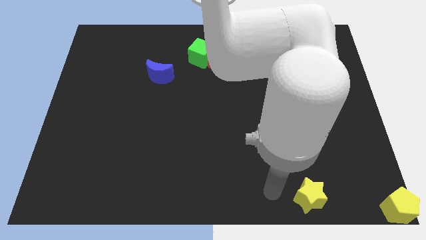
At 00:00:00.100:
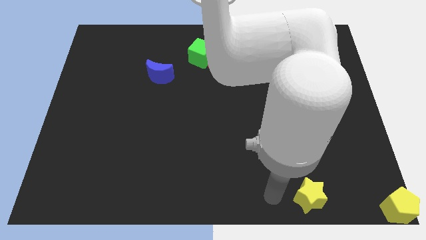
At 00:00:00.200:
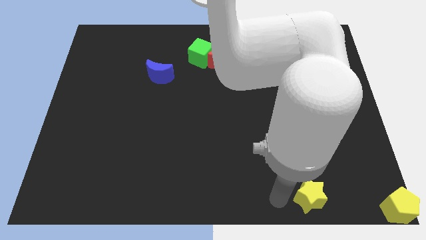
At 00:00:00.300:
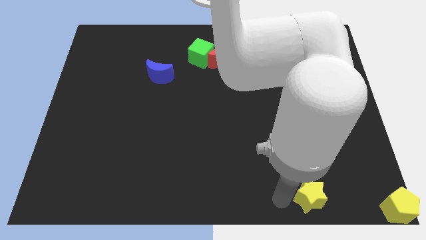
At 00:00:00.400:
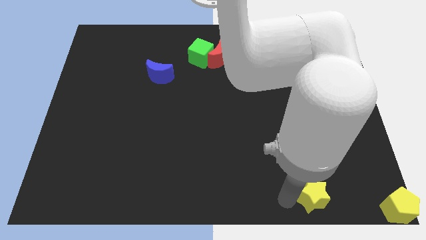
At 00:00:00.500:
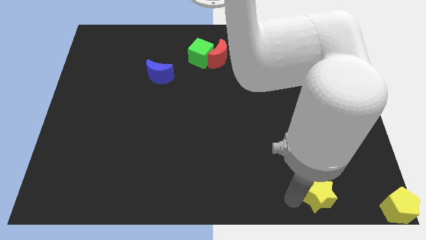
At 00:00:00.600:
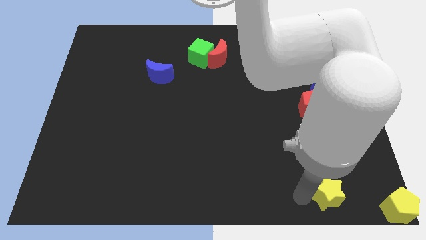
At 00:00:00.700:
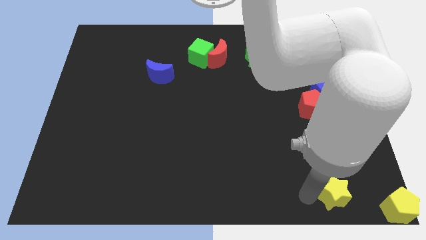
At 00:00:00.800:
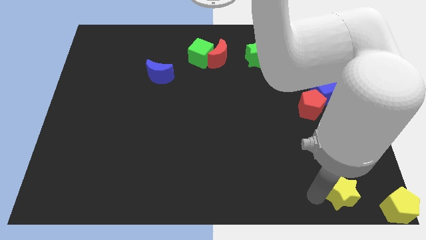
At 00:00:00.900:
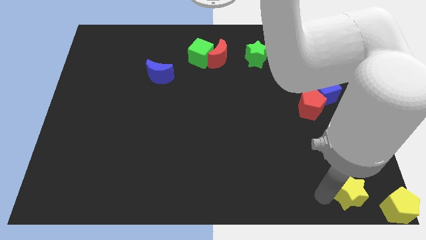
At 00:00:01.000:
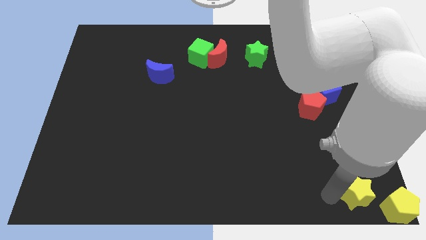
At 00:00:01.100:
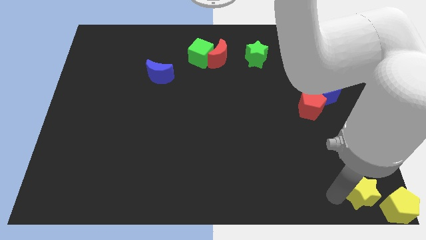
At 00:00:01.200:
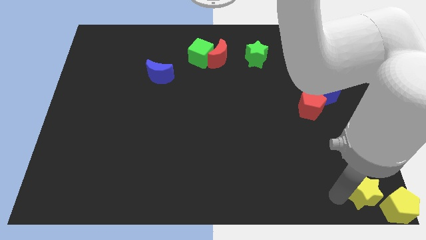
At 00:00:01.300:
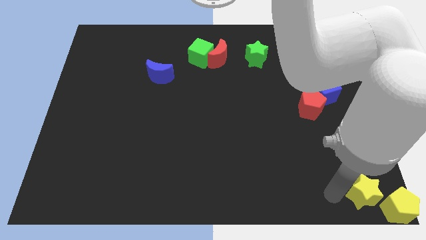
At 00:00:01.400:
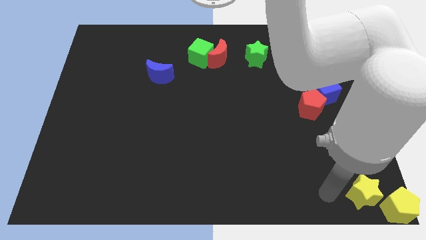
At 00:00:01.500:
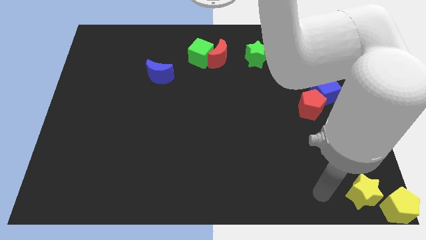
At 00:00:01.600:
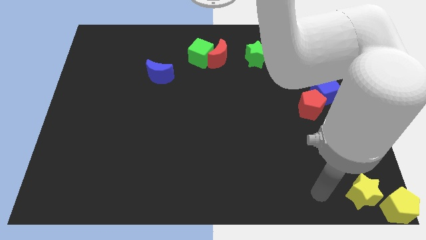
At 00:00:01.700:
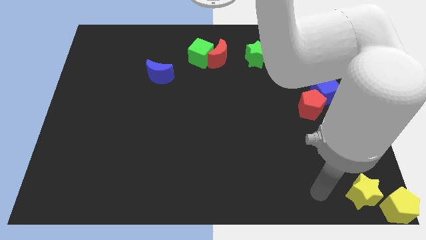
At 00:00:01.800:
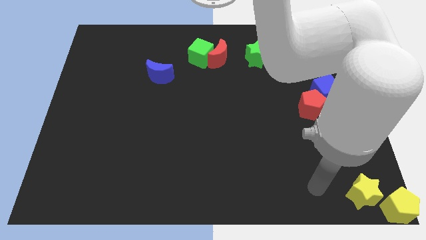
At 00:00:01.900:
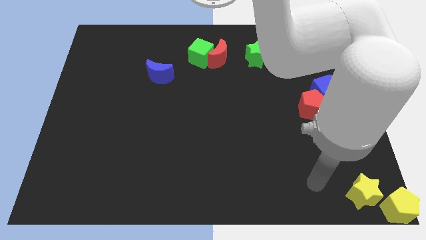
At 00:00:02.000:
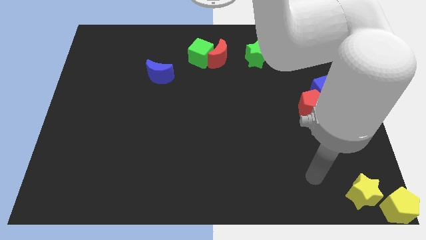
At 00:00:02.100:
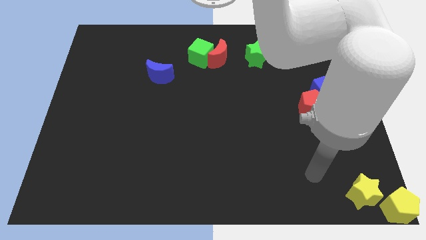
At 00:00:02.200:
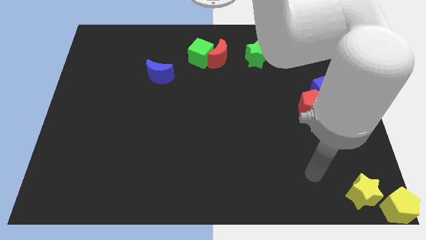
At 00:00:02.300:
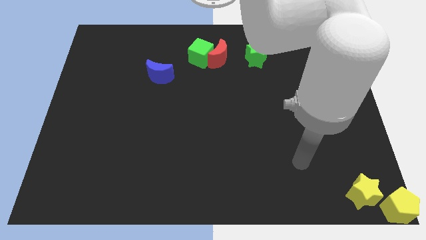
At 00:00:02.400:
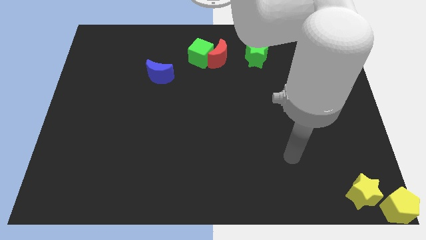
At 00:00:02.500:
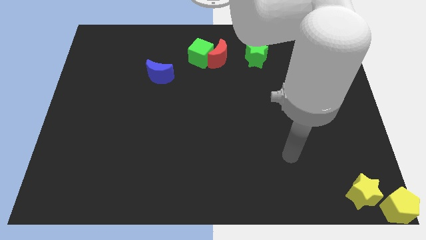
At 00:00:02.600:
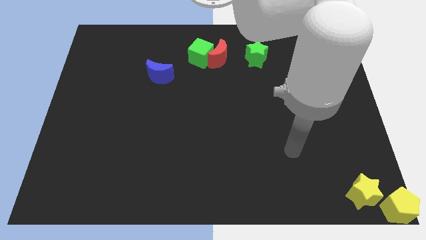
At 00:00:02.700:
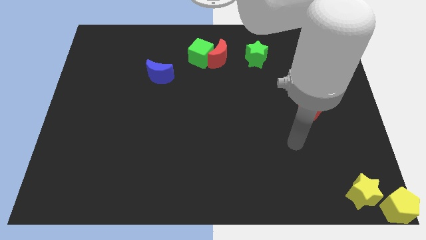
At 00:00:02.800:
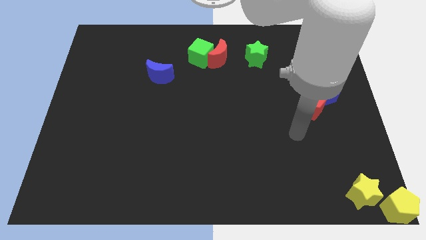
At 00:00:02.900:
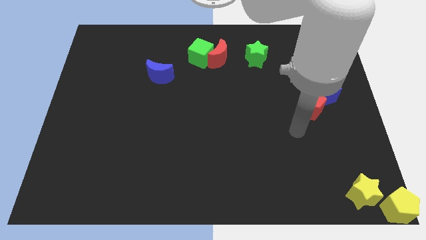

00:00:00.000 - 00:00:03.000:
drag the yellow star to the bottom right

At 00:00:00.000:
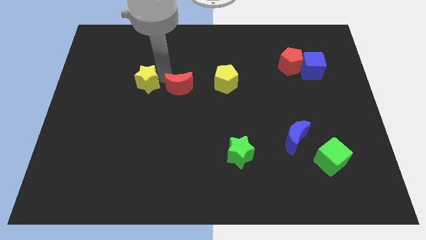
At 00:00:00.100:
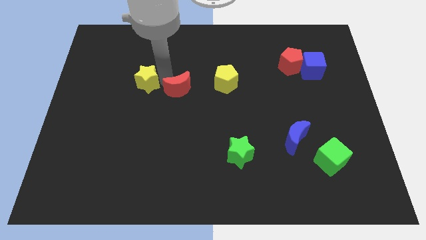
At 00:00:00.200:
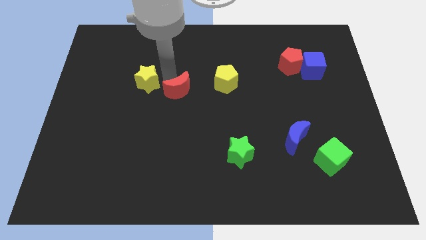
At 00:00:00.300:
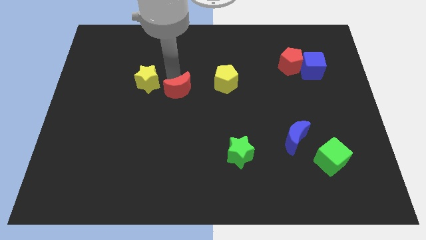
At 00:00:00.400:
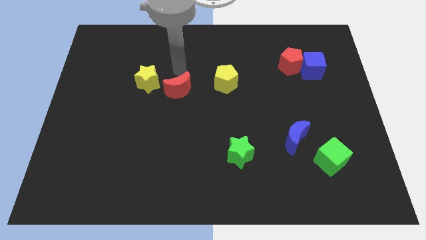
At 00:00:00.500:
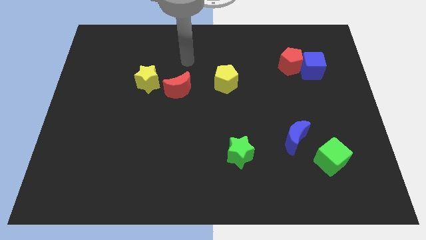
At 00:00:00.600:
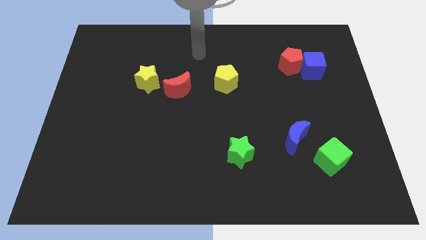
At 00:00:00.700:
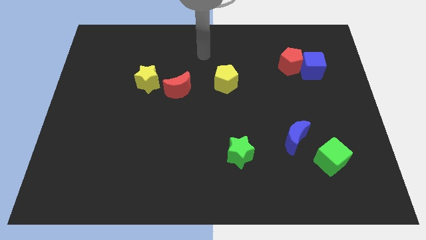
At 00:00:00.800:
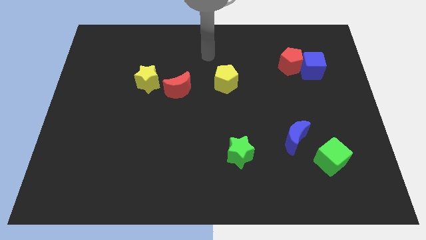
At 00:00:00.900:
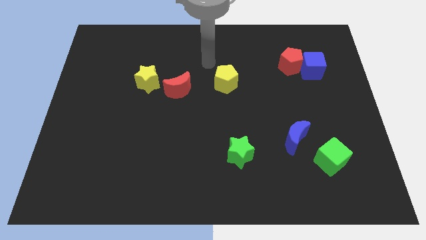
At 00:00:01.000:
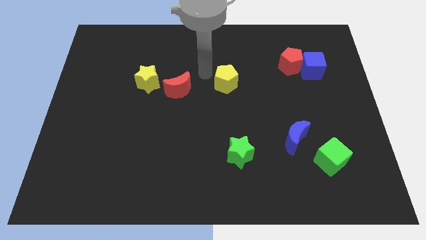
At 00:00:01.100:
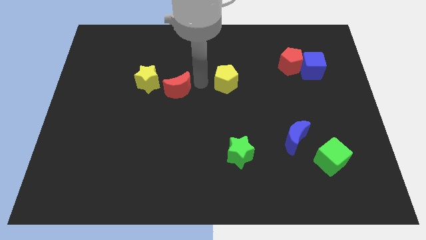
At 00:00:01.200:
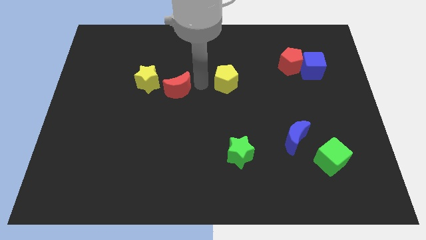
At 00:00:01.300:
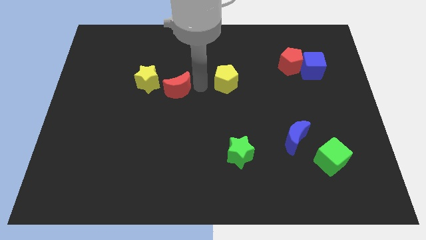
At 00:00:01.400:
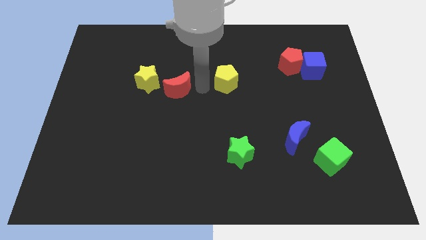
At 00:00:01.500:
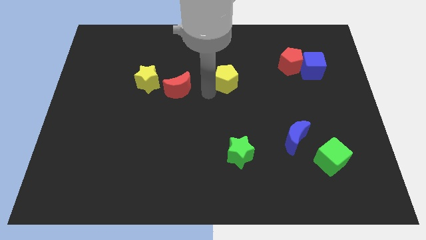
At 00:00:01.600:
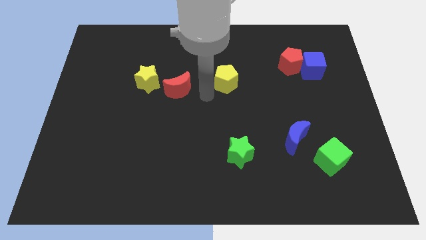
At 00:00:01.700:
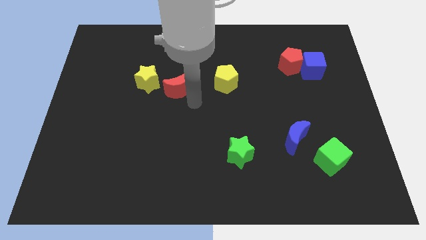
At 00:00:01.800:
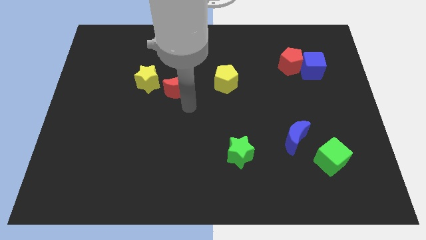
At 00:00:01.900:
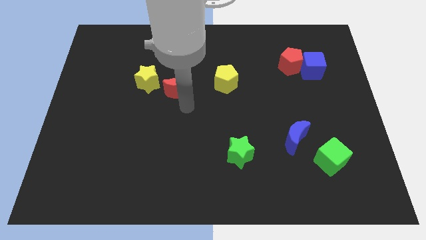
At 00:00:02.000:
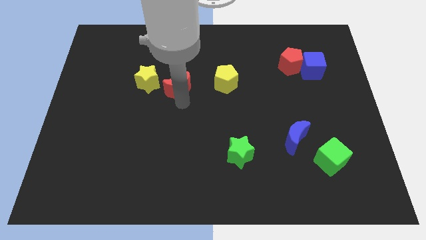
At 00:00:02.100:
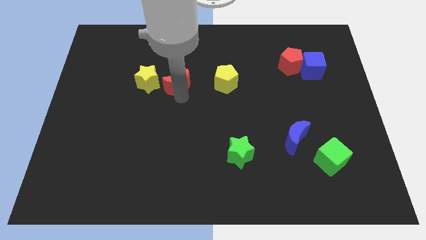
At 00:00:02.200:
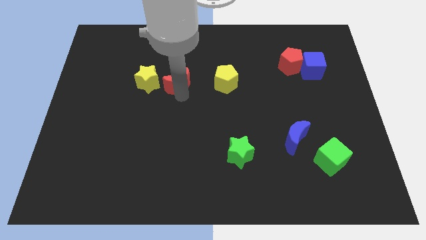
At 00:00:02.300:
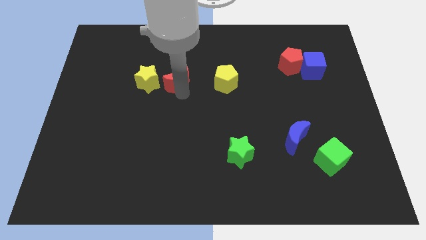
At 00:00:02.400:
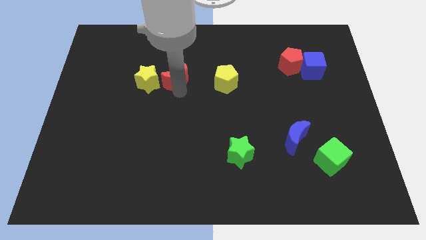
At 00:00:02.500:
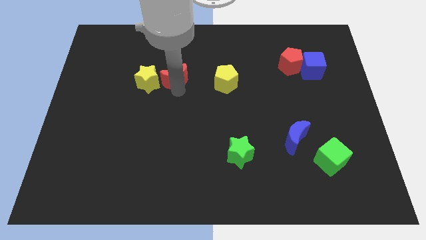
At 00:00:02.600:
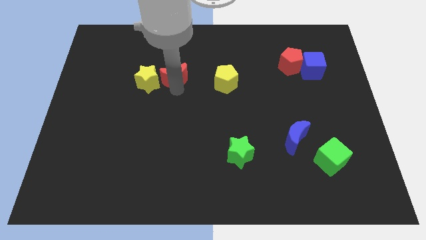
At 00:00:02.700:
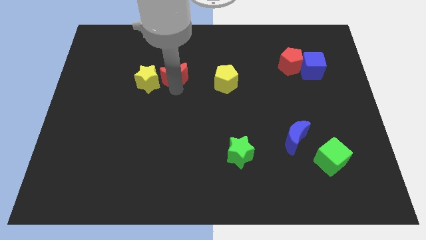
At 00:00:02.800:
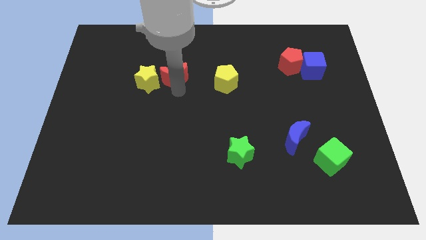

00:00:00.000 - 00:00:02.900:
move the red crescent slightly to the top of the board

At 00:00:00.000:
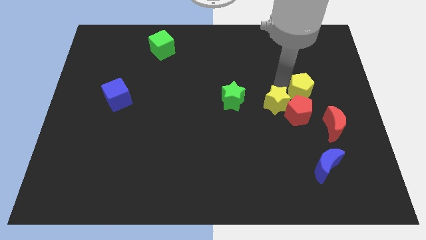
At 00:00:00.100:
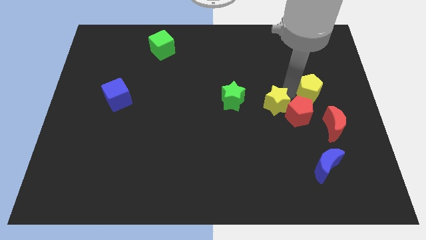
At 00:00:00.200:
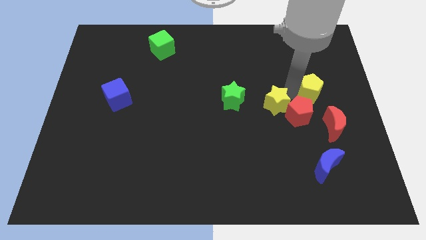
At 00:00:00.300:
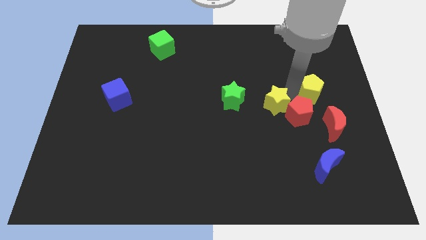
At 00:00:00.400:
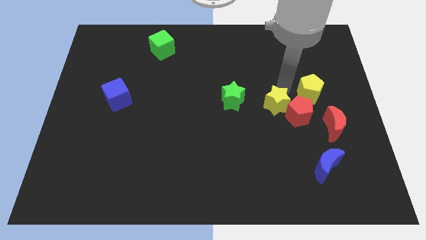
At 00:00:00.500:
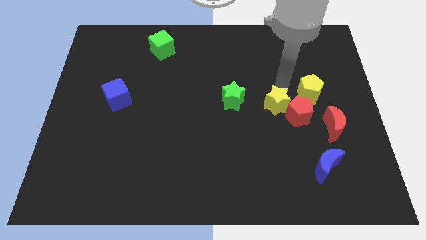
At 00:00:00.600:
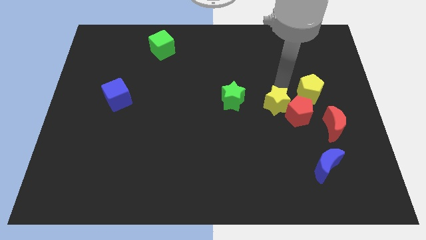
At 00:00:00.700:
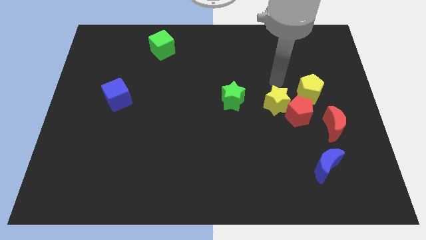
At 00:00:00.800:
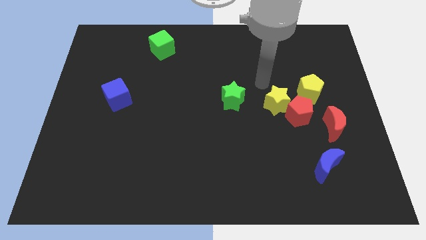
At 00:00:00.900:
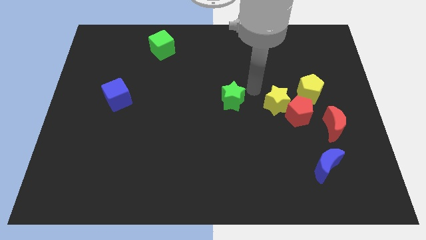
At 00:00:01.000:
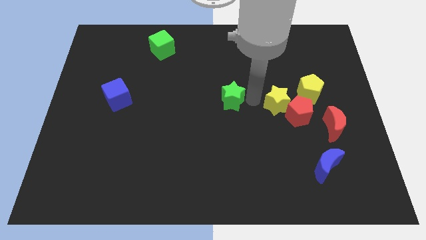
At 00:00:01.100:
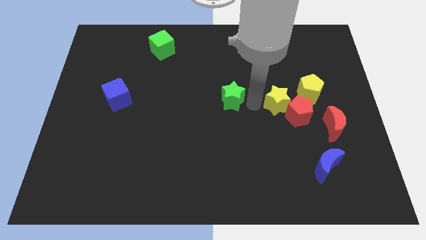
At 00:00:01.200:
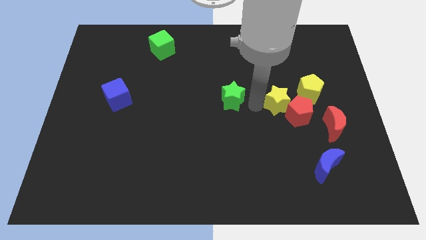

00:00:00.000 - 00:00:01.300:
place the arm between the green star and yellow star

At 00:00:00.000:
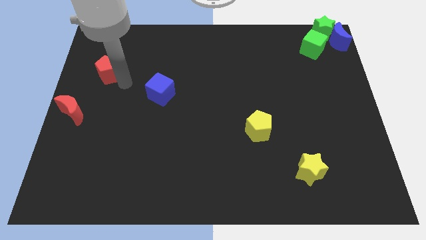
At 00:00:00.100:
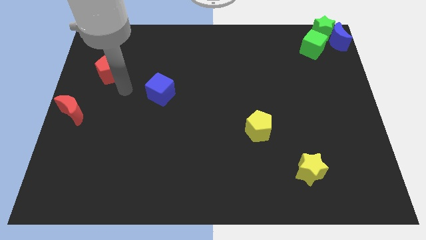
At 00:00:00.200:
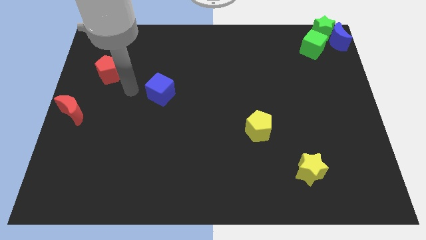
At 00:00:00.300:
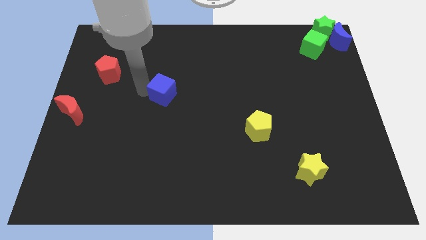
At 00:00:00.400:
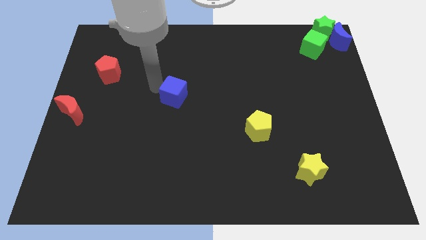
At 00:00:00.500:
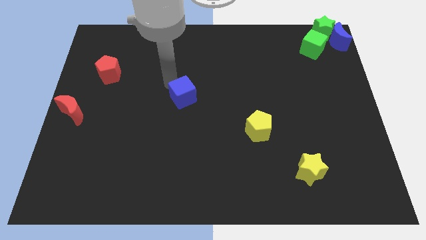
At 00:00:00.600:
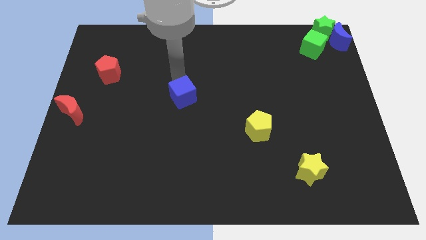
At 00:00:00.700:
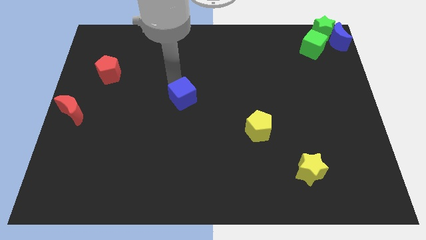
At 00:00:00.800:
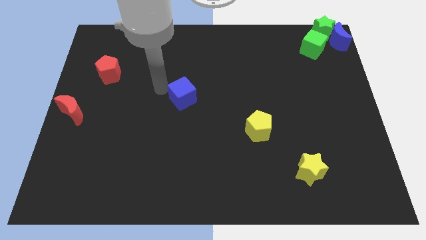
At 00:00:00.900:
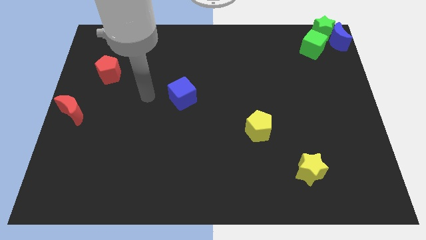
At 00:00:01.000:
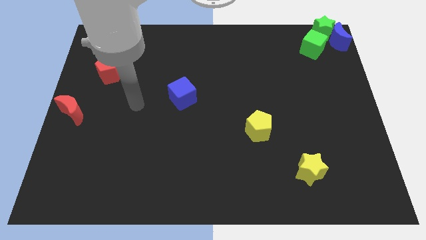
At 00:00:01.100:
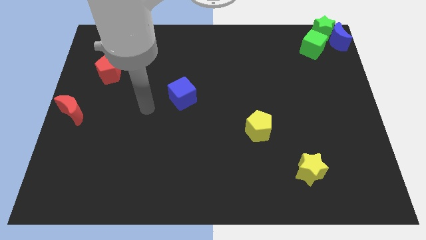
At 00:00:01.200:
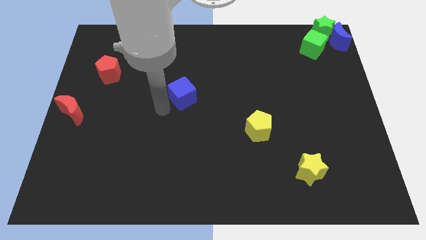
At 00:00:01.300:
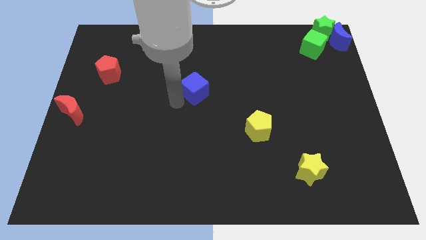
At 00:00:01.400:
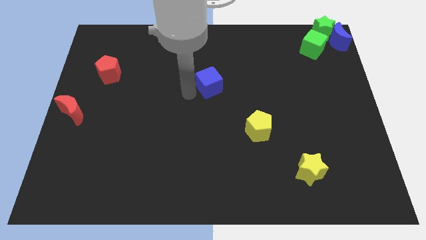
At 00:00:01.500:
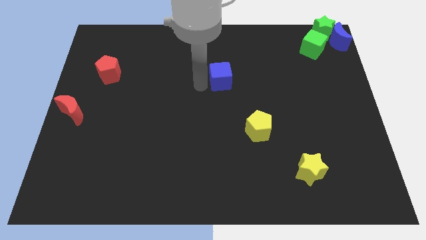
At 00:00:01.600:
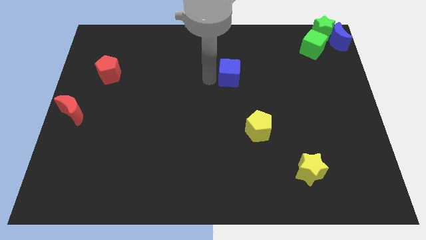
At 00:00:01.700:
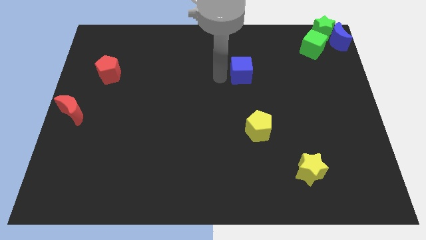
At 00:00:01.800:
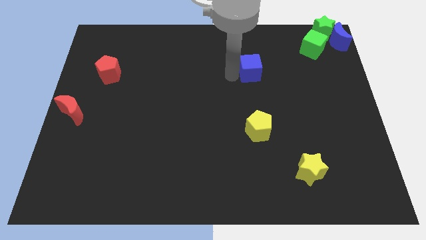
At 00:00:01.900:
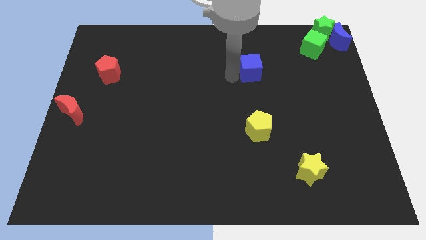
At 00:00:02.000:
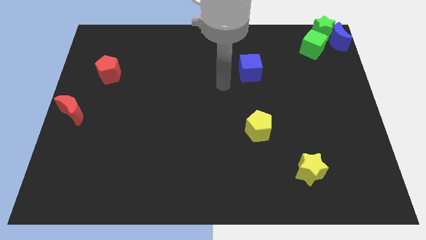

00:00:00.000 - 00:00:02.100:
place the blue cube above the yellow pentagon
